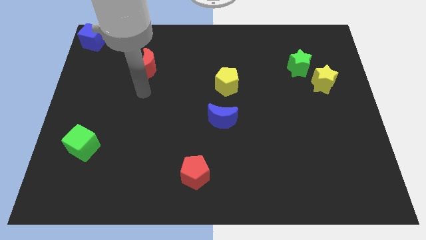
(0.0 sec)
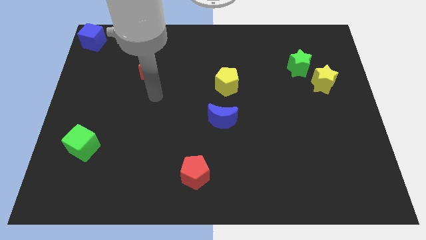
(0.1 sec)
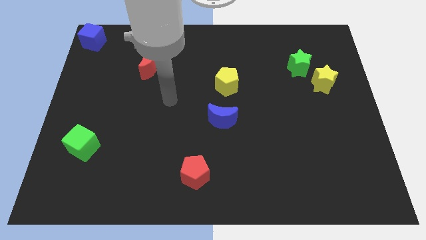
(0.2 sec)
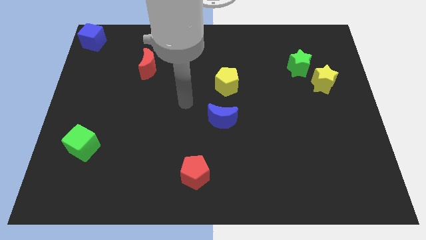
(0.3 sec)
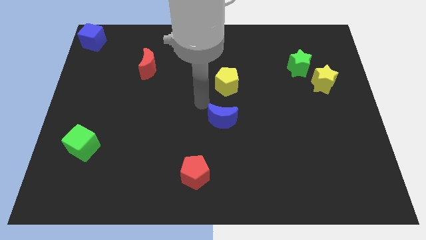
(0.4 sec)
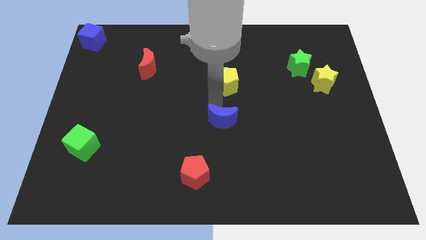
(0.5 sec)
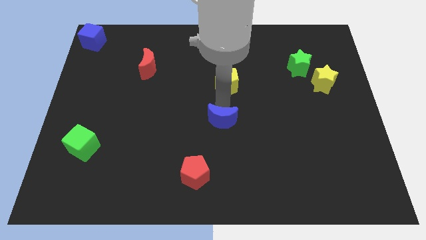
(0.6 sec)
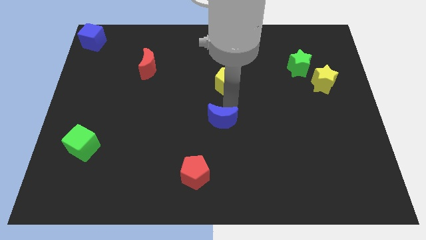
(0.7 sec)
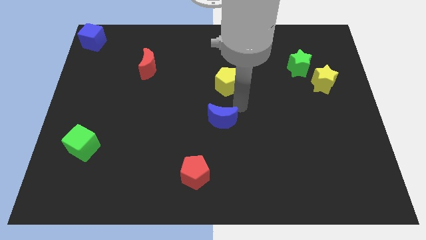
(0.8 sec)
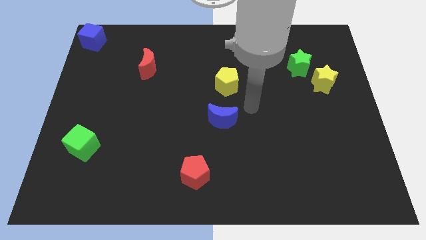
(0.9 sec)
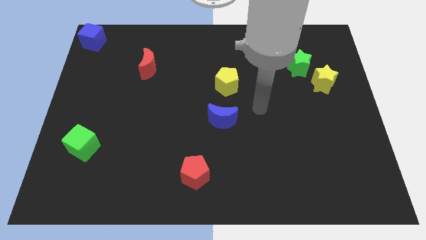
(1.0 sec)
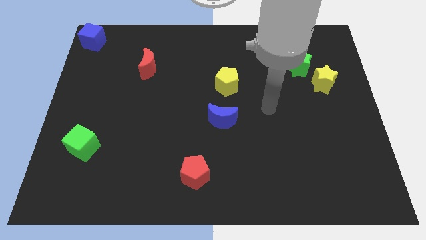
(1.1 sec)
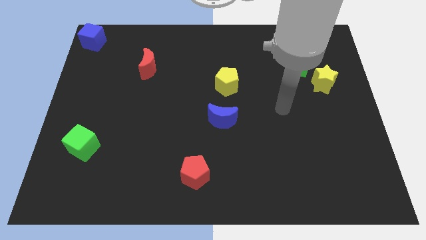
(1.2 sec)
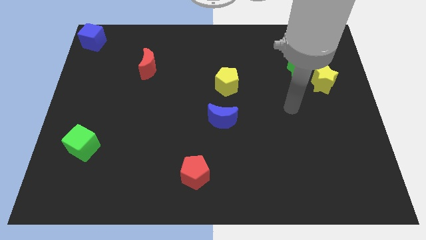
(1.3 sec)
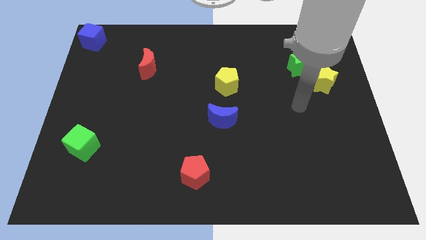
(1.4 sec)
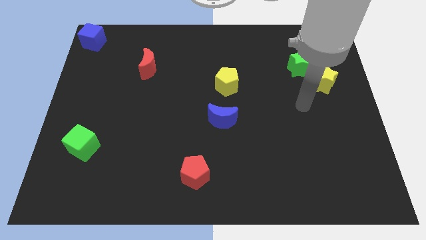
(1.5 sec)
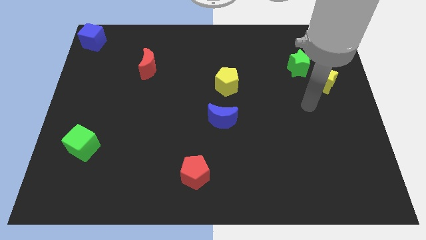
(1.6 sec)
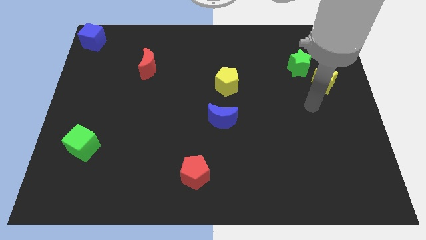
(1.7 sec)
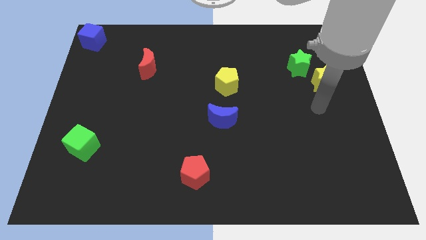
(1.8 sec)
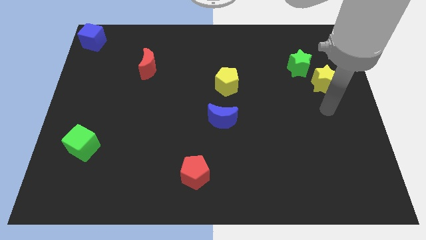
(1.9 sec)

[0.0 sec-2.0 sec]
move your arm towards the yellow star

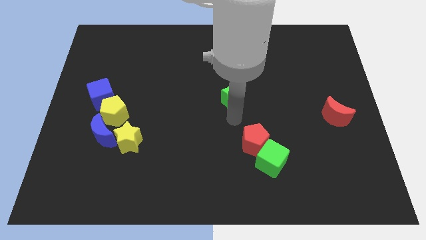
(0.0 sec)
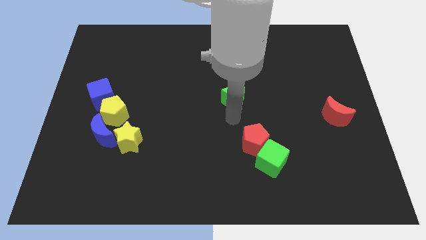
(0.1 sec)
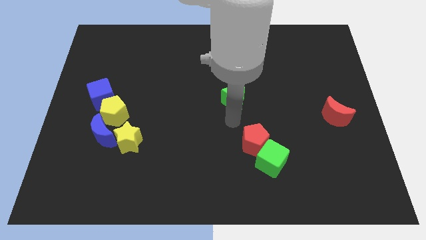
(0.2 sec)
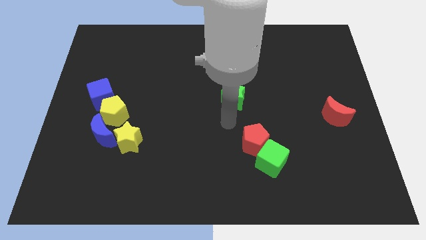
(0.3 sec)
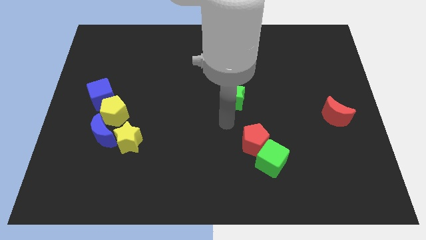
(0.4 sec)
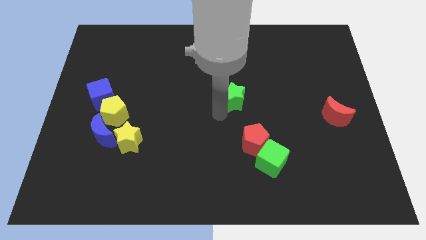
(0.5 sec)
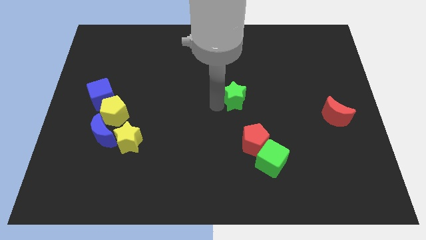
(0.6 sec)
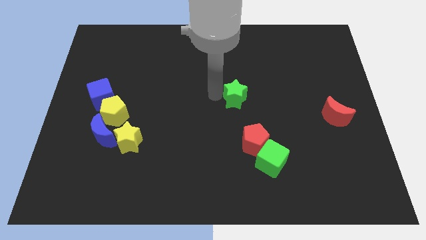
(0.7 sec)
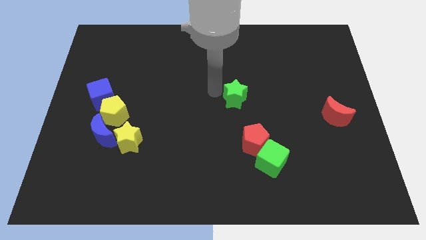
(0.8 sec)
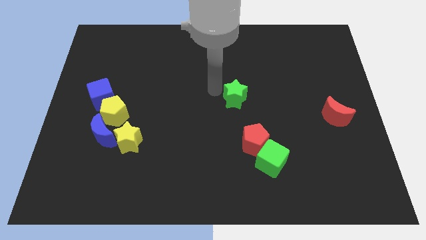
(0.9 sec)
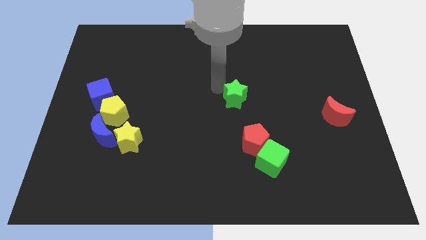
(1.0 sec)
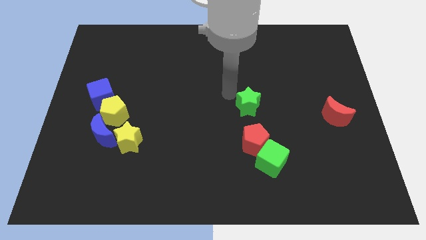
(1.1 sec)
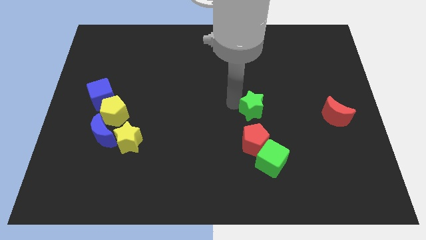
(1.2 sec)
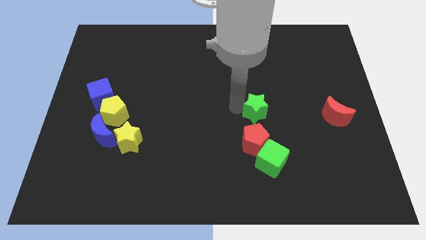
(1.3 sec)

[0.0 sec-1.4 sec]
move the green star to the top of the red pentagon

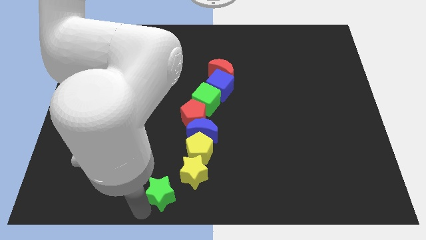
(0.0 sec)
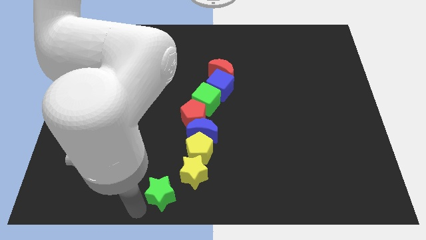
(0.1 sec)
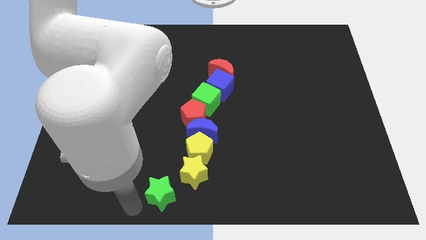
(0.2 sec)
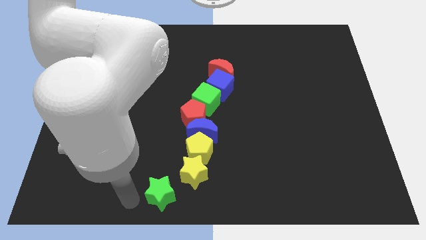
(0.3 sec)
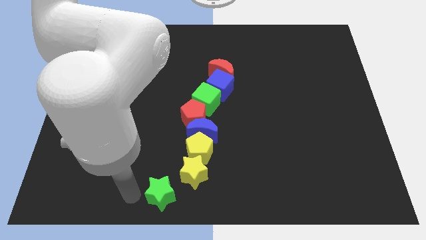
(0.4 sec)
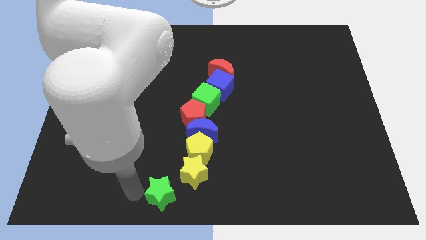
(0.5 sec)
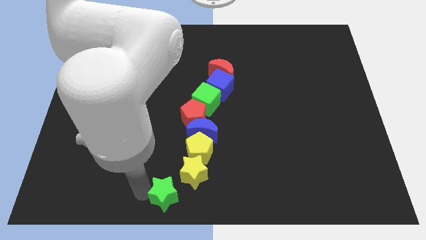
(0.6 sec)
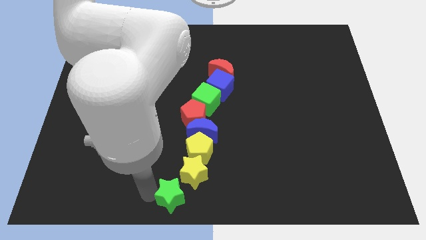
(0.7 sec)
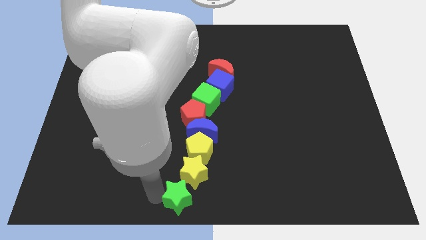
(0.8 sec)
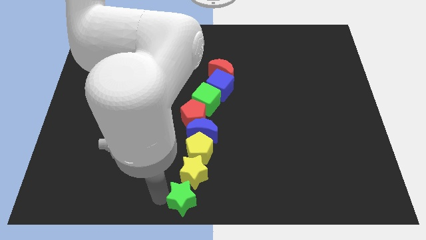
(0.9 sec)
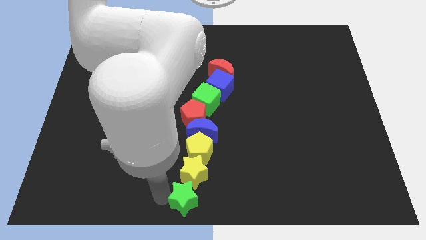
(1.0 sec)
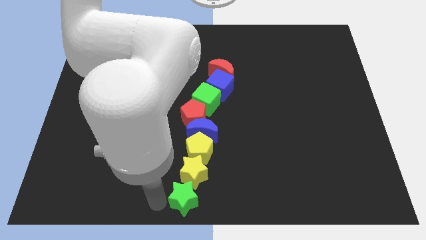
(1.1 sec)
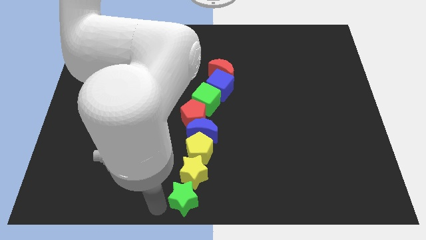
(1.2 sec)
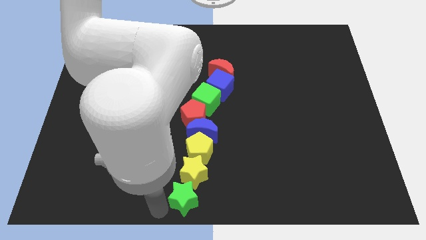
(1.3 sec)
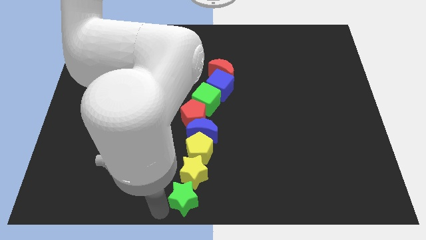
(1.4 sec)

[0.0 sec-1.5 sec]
move the green star to the bottom of the yellow star

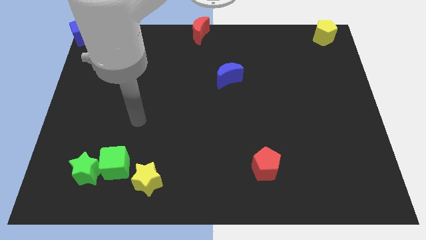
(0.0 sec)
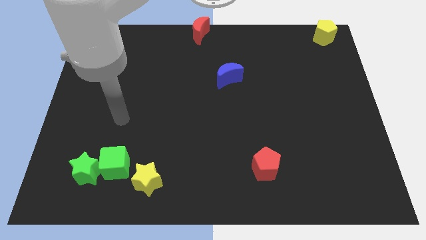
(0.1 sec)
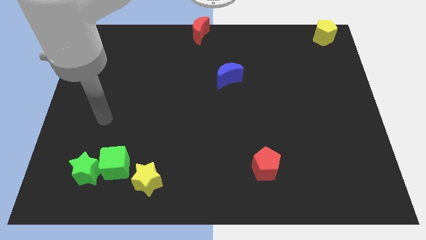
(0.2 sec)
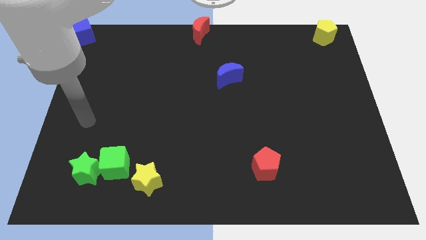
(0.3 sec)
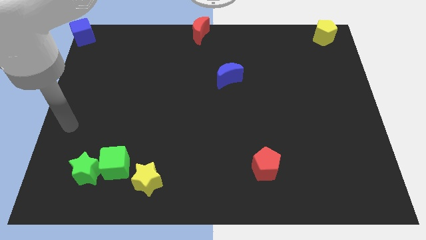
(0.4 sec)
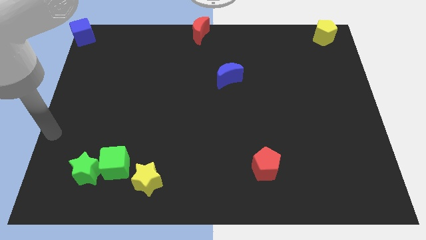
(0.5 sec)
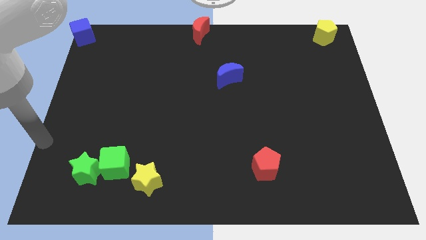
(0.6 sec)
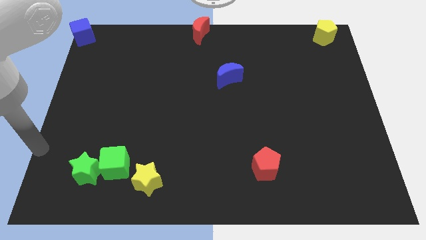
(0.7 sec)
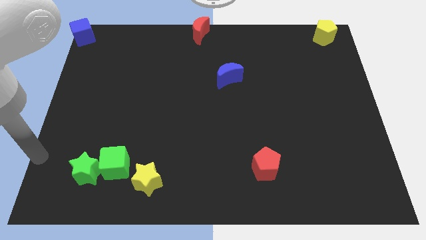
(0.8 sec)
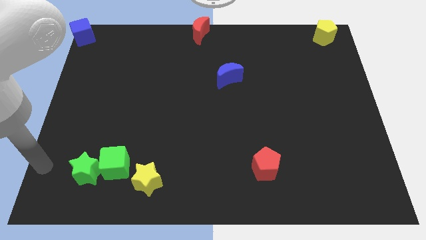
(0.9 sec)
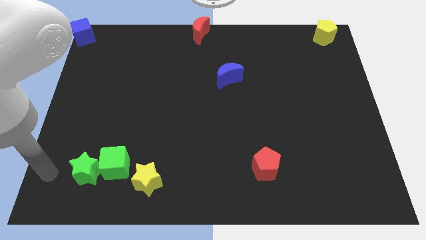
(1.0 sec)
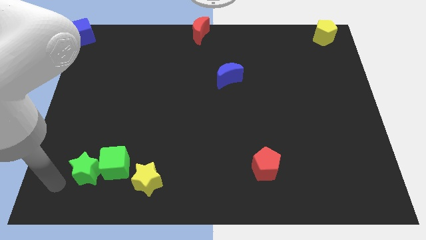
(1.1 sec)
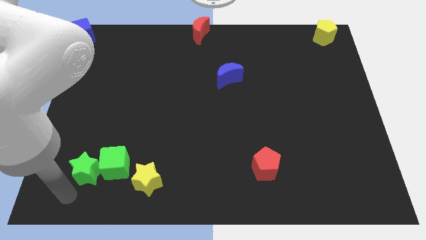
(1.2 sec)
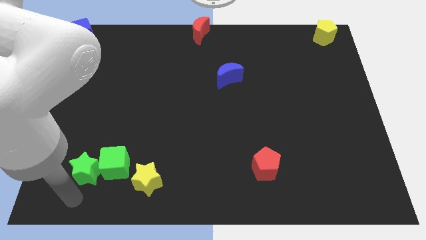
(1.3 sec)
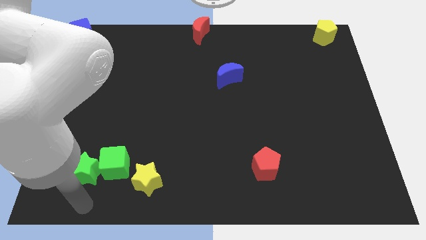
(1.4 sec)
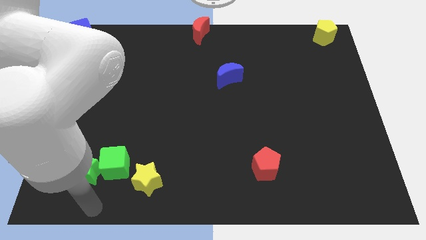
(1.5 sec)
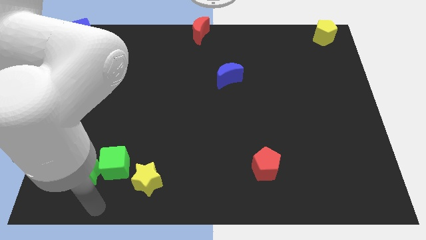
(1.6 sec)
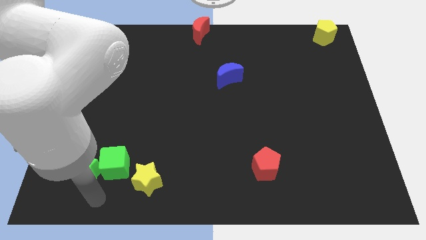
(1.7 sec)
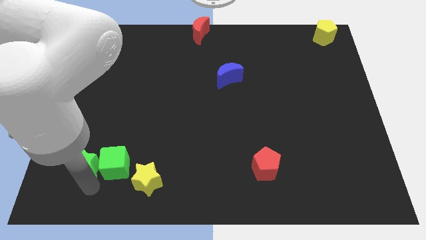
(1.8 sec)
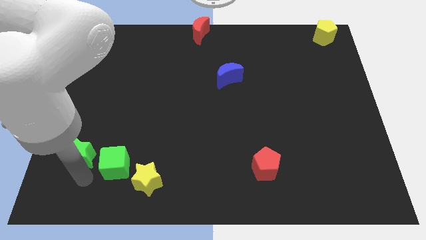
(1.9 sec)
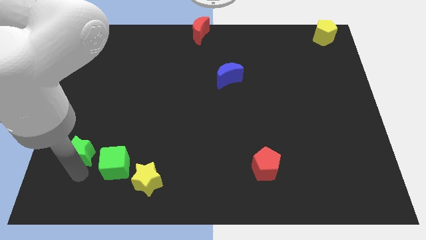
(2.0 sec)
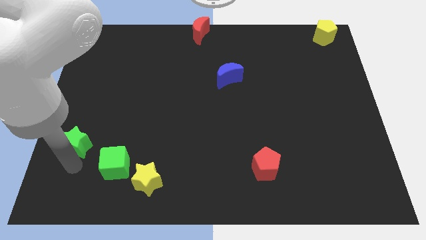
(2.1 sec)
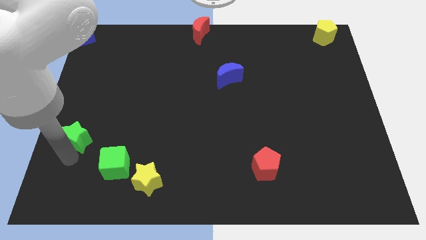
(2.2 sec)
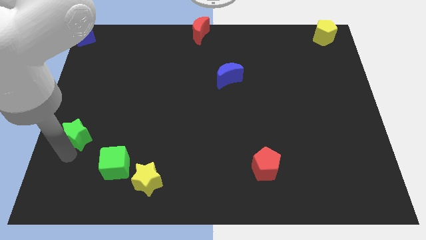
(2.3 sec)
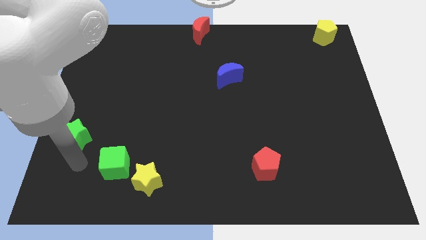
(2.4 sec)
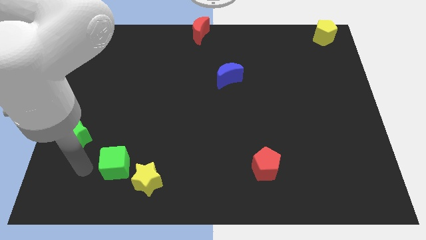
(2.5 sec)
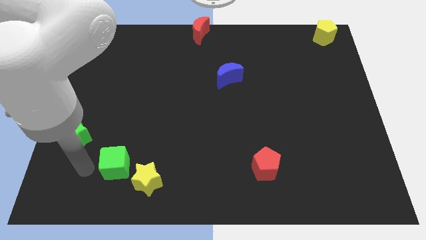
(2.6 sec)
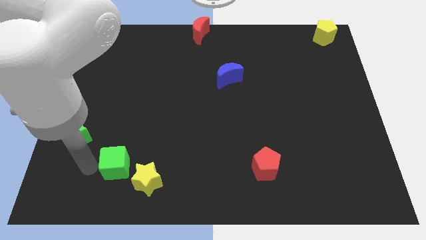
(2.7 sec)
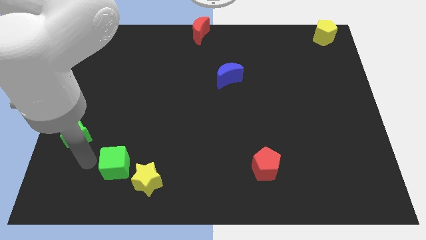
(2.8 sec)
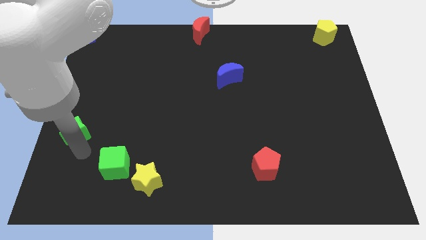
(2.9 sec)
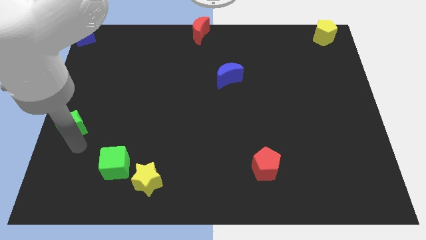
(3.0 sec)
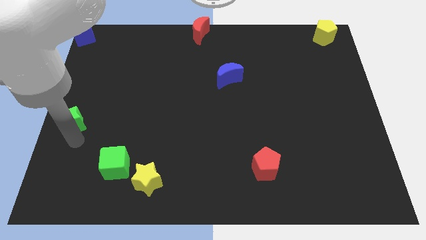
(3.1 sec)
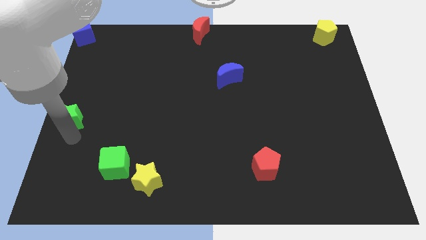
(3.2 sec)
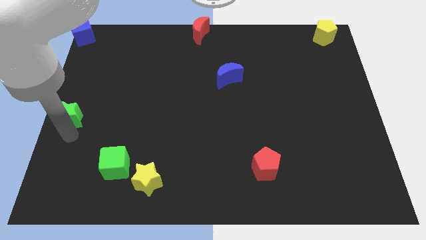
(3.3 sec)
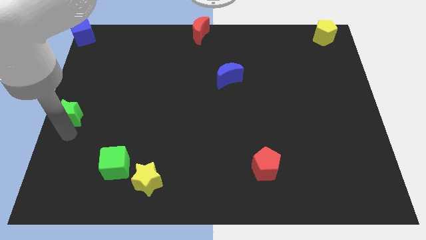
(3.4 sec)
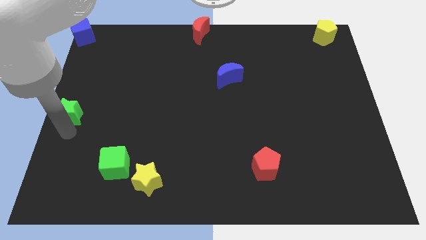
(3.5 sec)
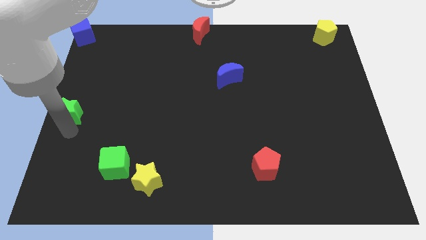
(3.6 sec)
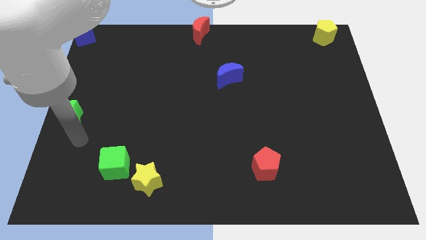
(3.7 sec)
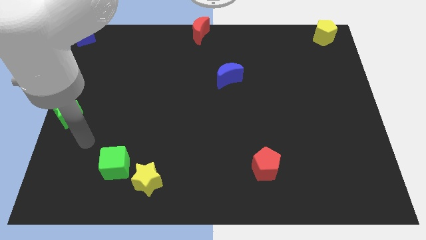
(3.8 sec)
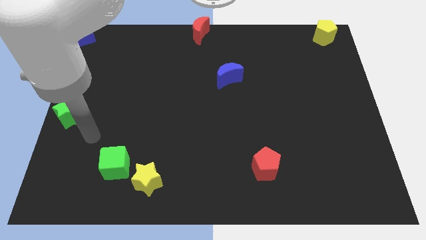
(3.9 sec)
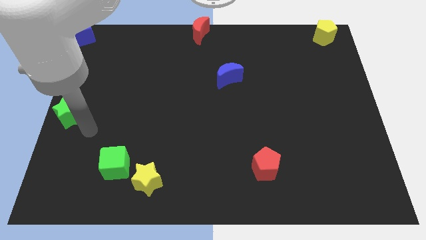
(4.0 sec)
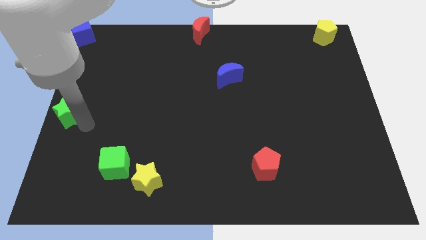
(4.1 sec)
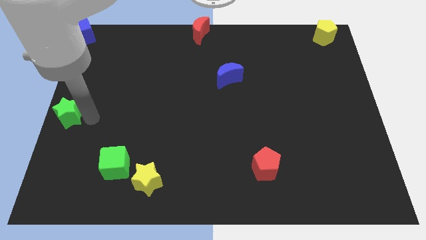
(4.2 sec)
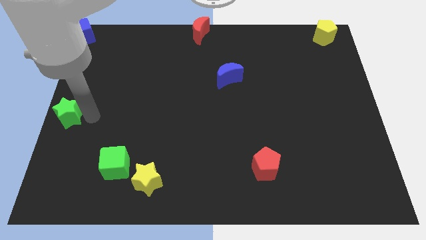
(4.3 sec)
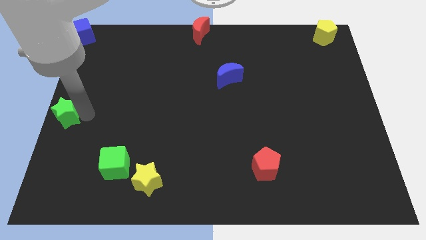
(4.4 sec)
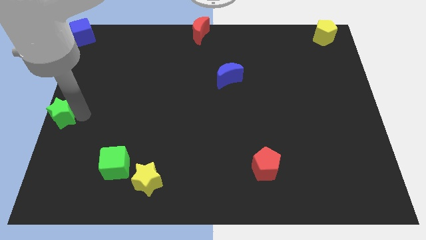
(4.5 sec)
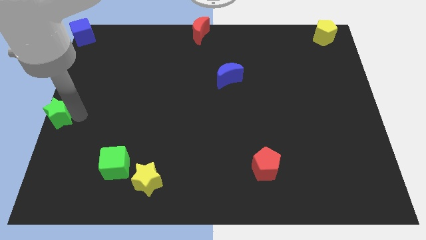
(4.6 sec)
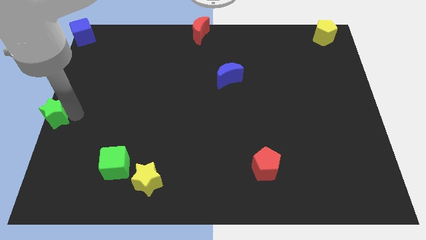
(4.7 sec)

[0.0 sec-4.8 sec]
place the green star to the center left of the board
